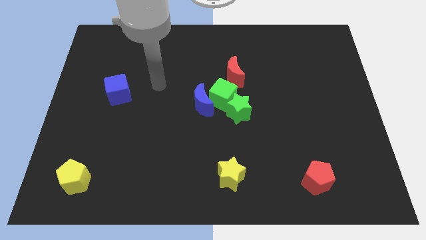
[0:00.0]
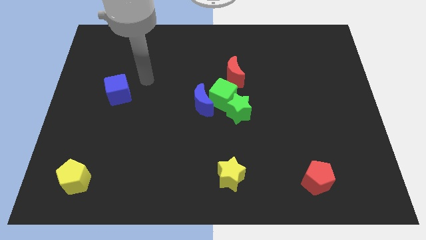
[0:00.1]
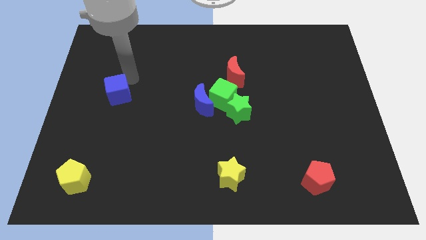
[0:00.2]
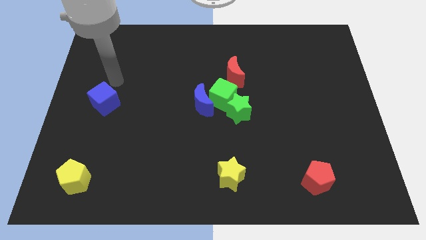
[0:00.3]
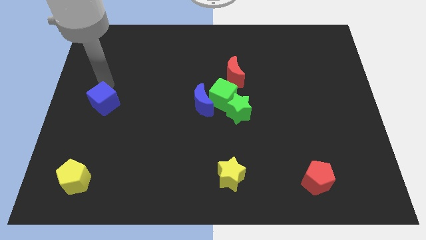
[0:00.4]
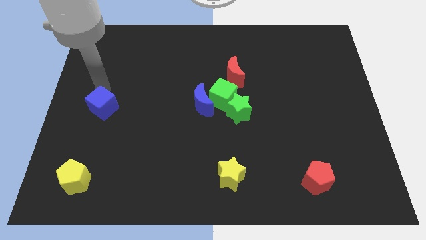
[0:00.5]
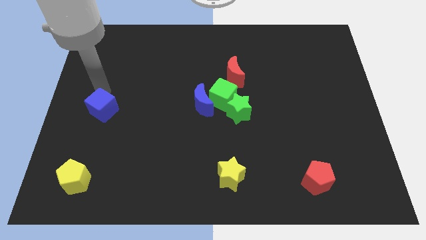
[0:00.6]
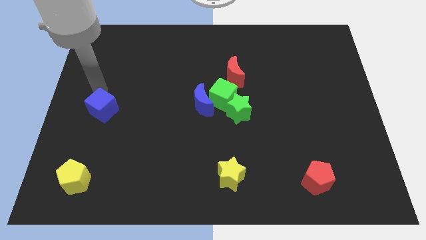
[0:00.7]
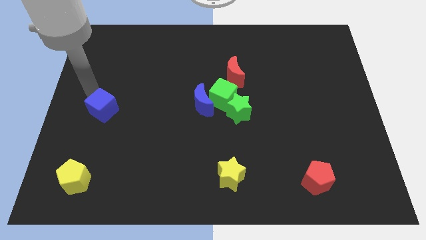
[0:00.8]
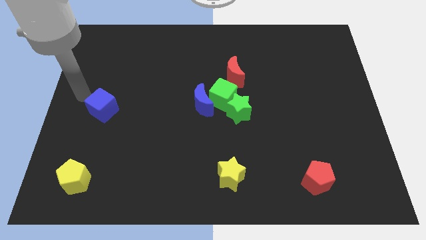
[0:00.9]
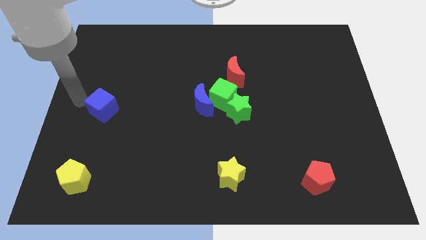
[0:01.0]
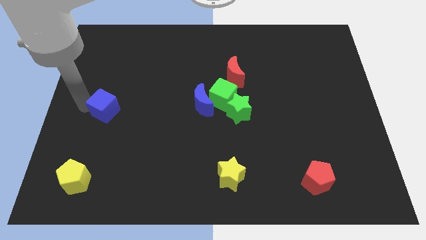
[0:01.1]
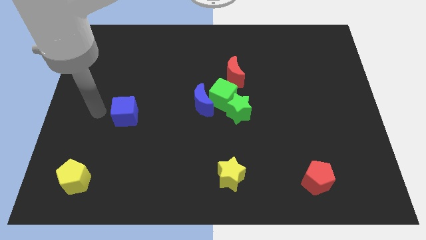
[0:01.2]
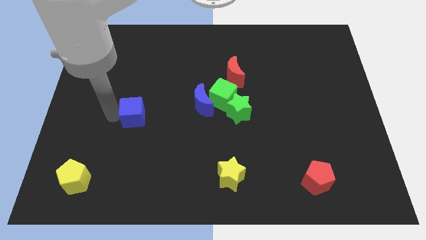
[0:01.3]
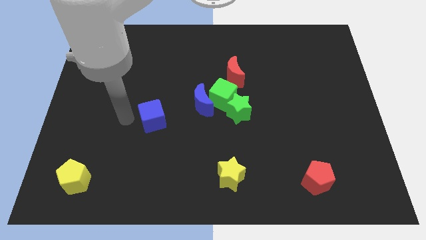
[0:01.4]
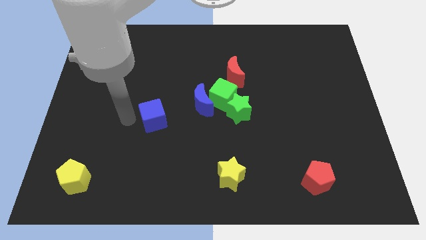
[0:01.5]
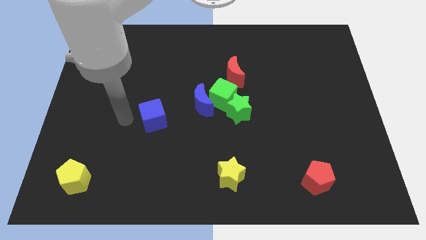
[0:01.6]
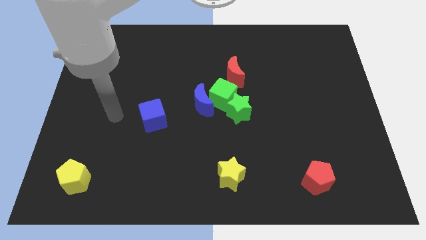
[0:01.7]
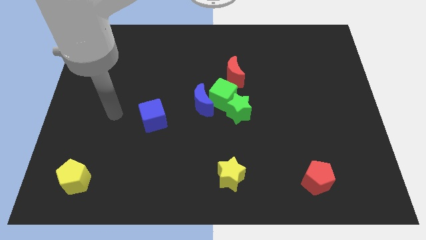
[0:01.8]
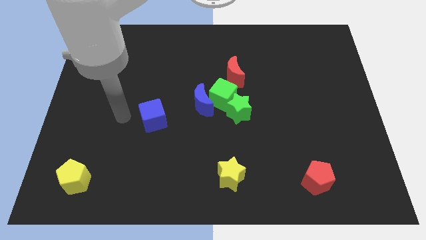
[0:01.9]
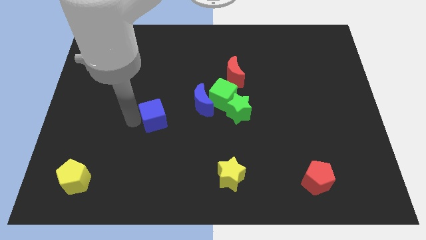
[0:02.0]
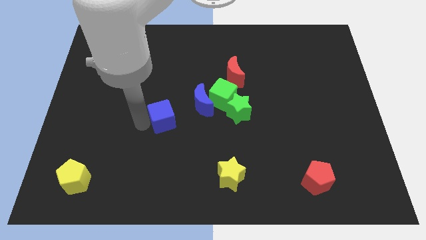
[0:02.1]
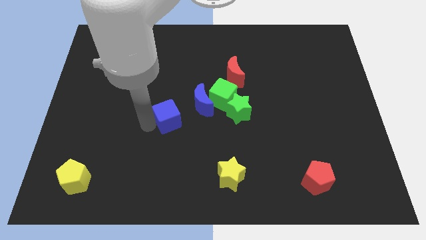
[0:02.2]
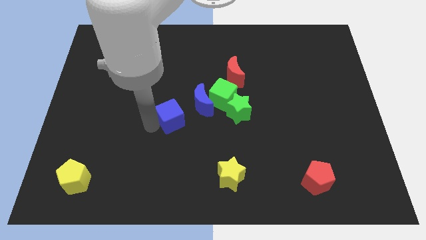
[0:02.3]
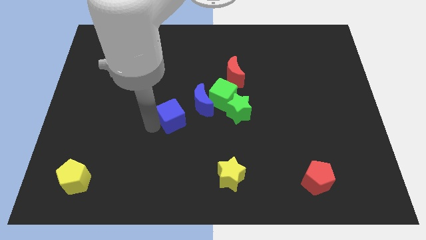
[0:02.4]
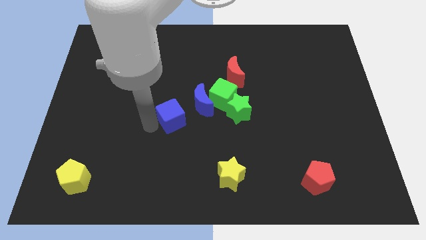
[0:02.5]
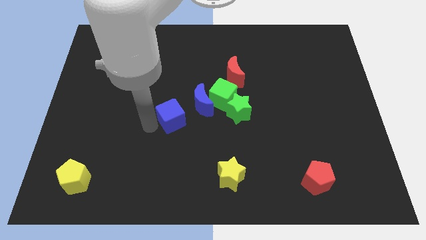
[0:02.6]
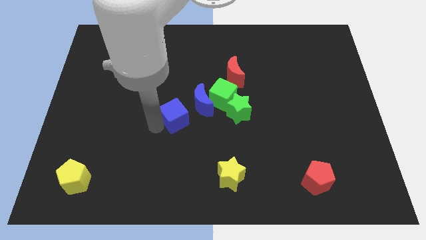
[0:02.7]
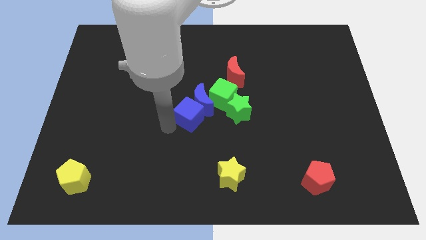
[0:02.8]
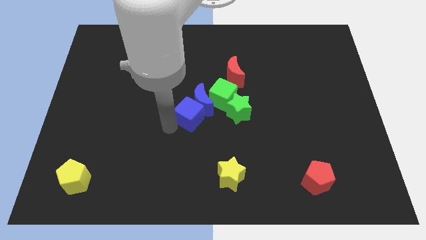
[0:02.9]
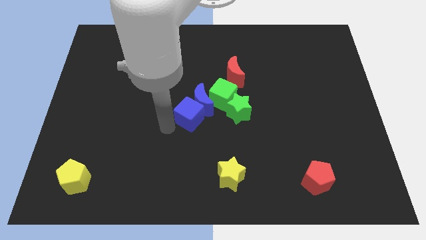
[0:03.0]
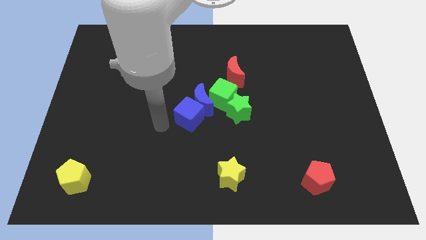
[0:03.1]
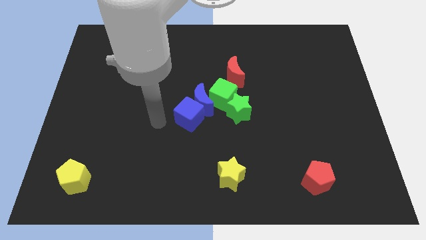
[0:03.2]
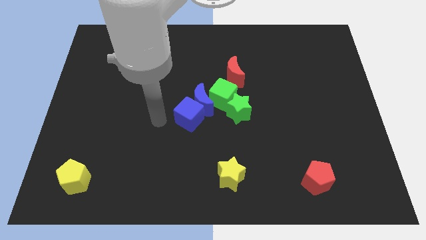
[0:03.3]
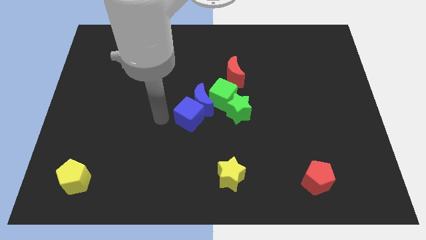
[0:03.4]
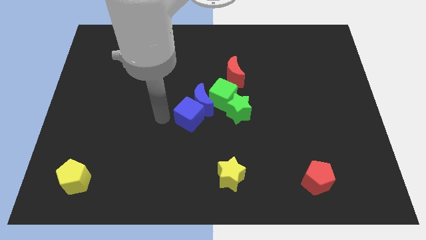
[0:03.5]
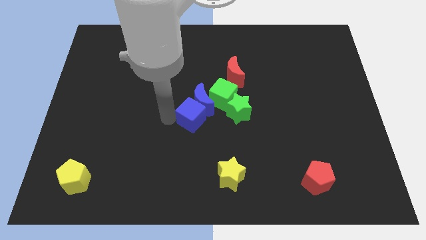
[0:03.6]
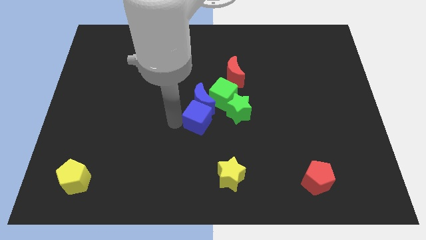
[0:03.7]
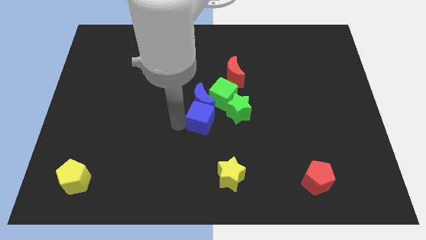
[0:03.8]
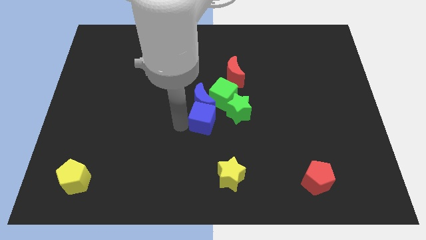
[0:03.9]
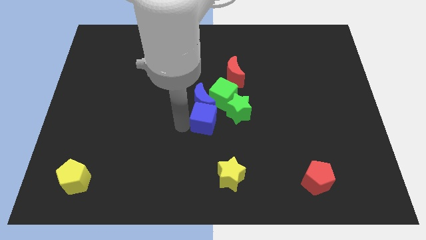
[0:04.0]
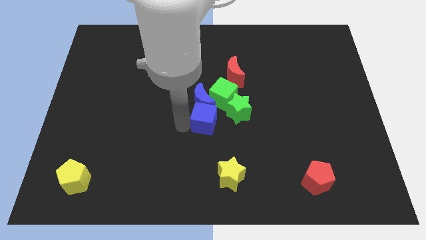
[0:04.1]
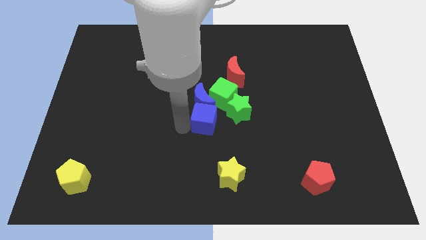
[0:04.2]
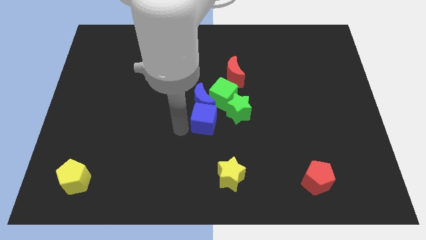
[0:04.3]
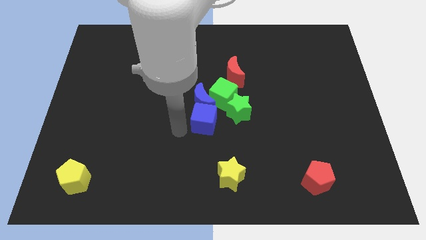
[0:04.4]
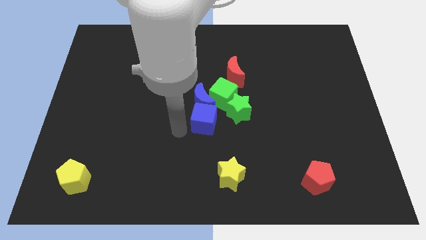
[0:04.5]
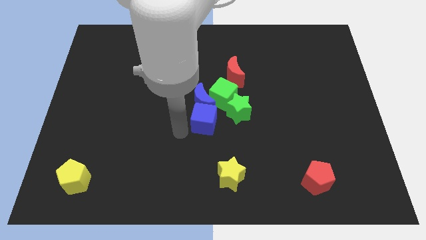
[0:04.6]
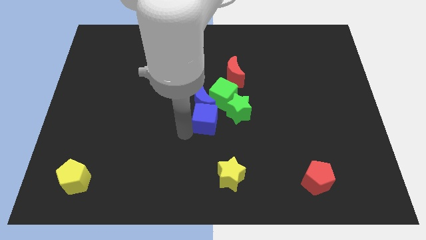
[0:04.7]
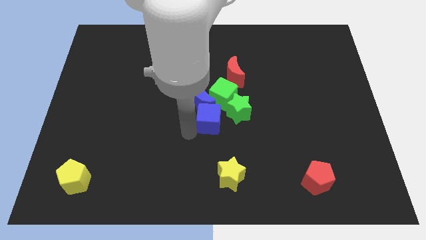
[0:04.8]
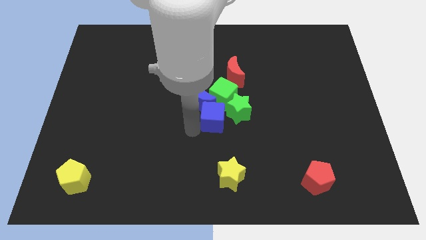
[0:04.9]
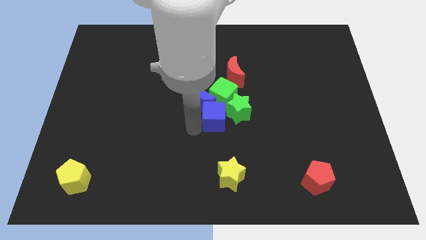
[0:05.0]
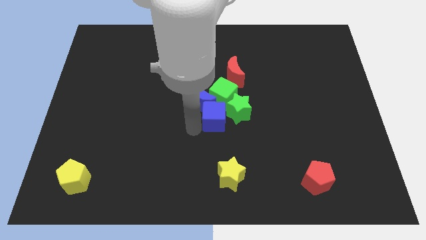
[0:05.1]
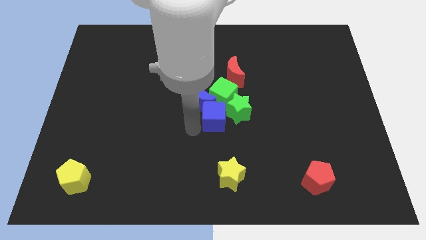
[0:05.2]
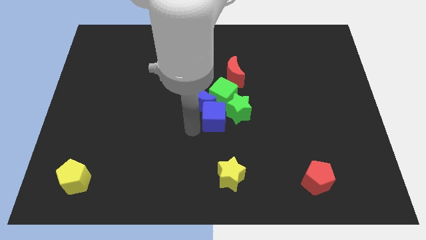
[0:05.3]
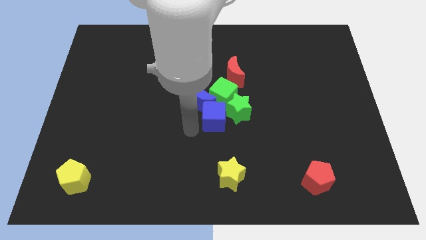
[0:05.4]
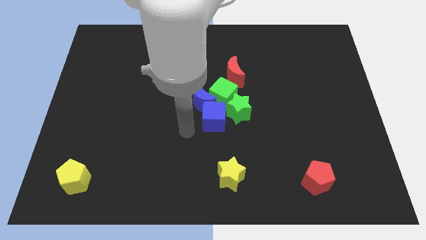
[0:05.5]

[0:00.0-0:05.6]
push the blue cube to the bottom of the blue moon

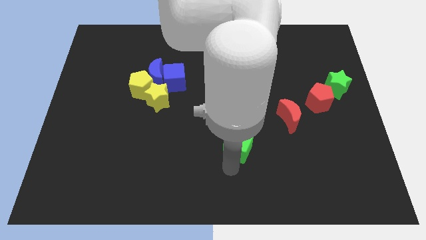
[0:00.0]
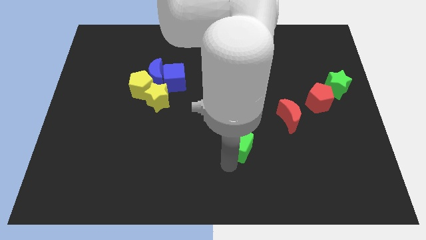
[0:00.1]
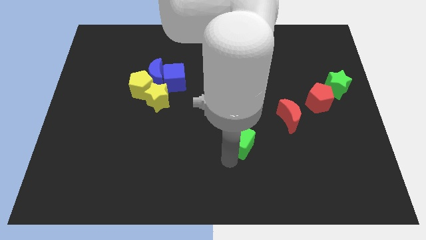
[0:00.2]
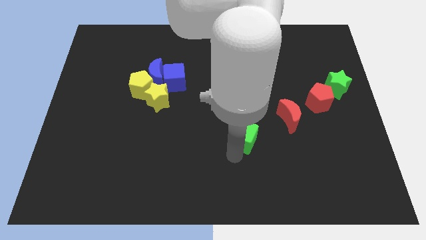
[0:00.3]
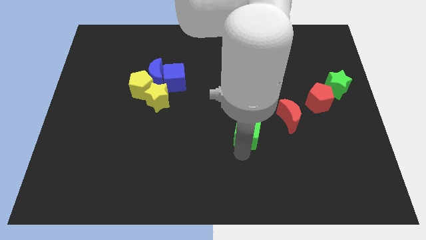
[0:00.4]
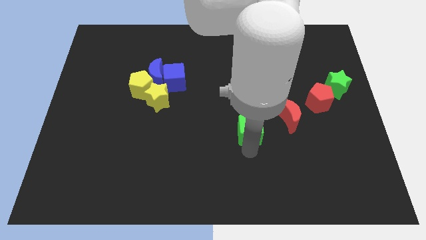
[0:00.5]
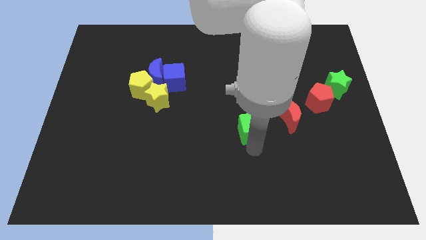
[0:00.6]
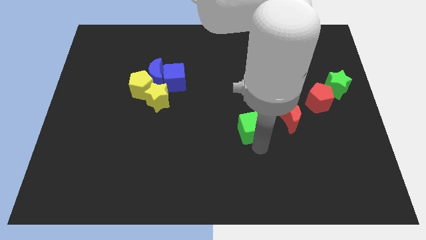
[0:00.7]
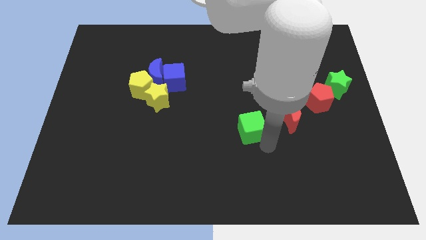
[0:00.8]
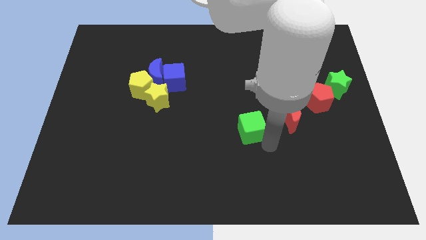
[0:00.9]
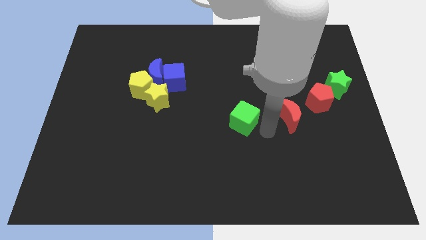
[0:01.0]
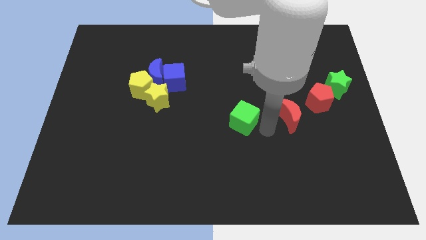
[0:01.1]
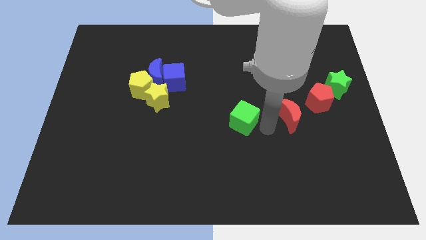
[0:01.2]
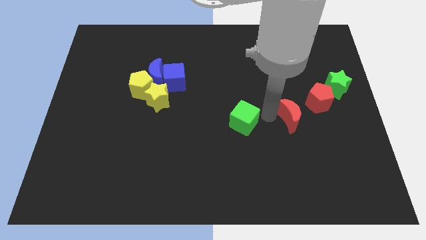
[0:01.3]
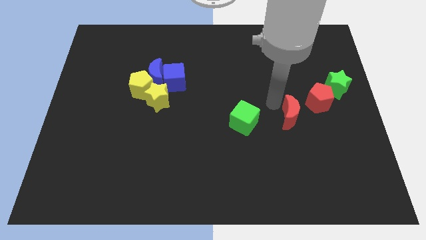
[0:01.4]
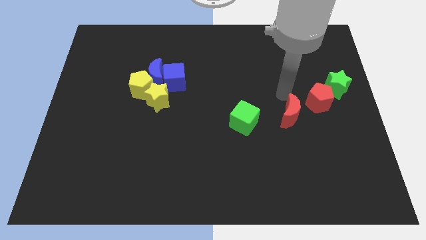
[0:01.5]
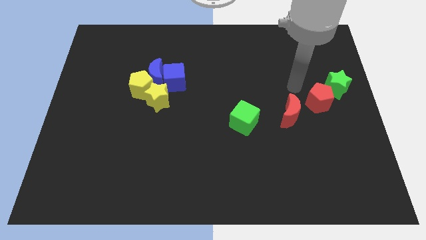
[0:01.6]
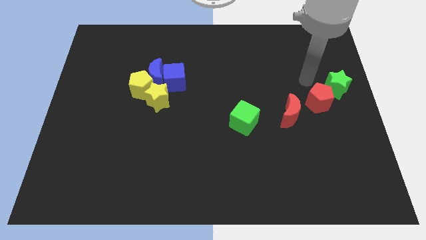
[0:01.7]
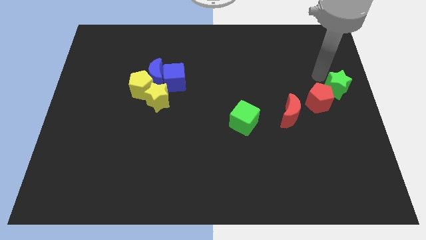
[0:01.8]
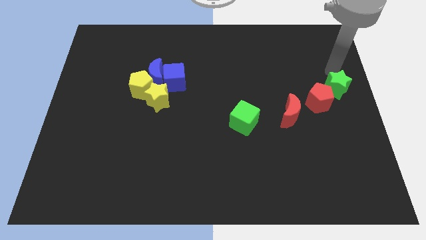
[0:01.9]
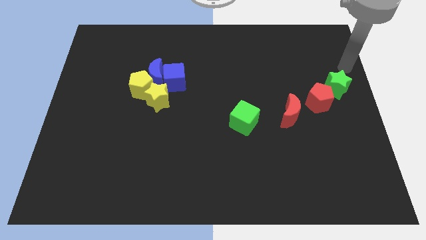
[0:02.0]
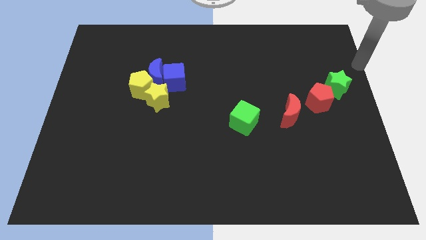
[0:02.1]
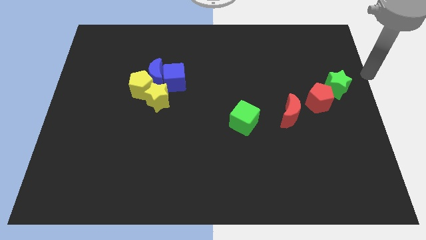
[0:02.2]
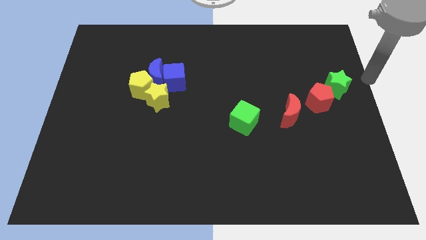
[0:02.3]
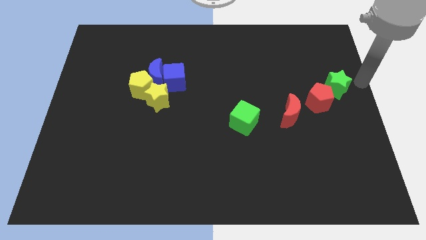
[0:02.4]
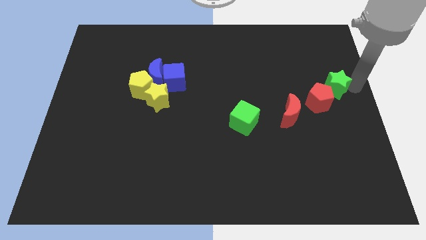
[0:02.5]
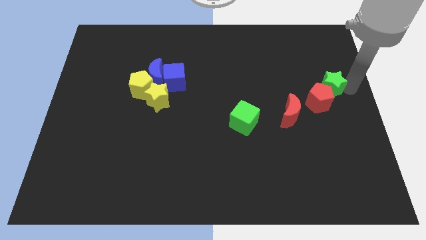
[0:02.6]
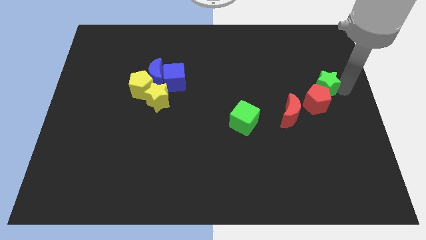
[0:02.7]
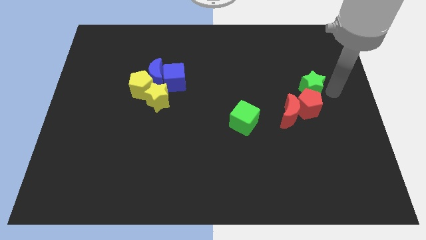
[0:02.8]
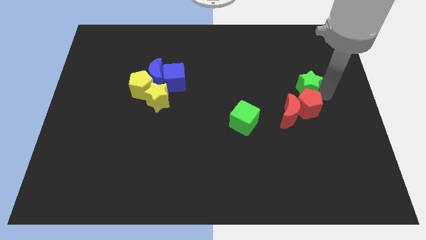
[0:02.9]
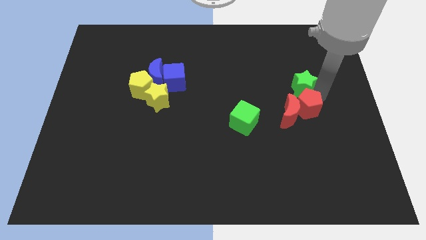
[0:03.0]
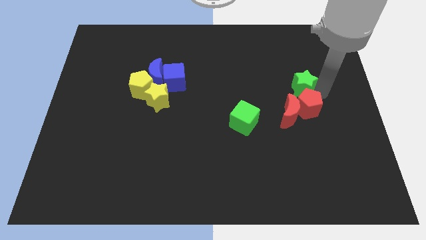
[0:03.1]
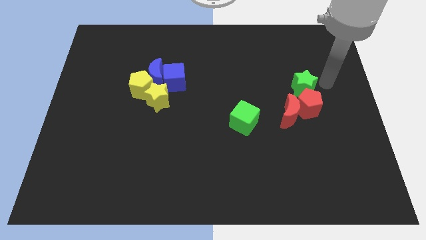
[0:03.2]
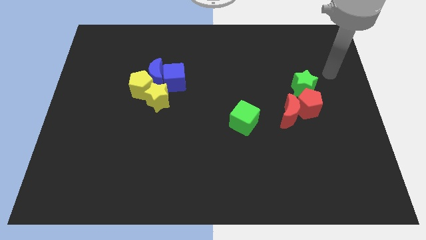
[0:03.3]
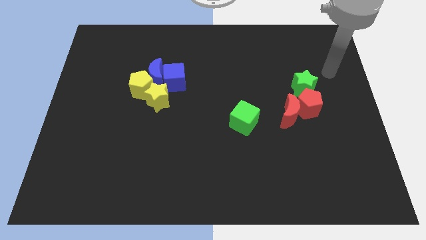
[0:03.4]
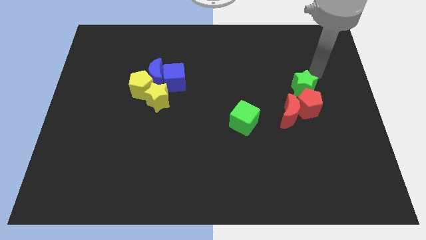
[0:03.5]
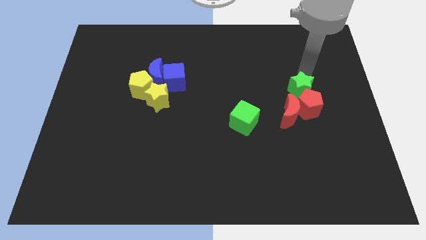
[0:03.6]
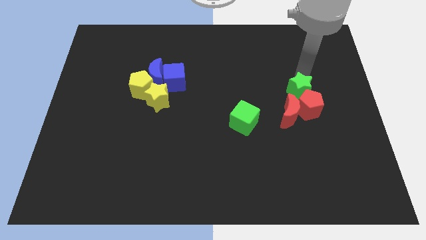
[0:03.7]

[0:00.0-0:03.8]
place the green star above the red pentagon
